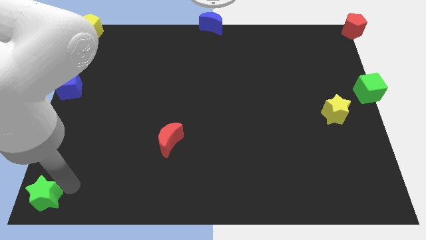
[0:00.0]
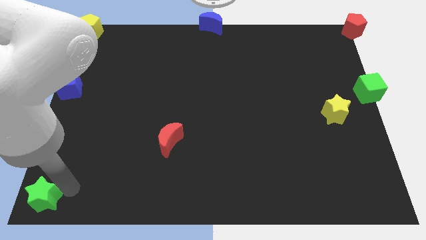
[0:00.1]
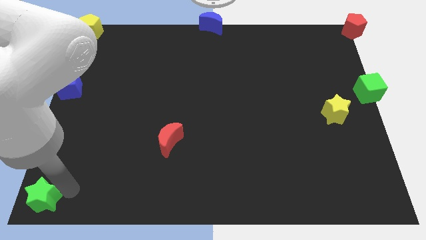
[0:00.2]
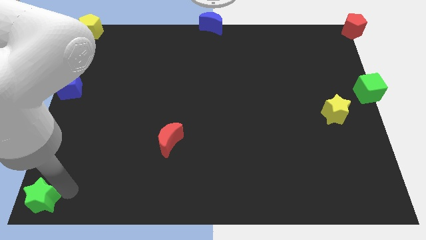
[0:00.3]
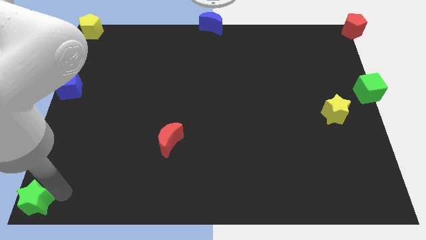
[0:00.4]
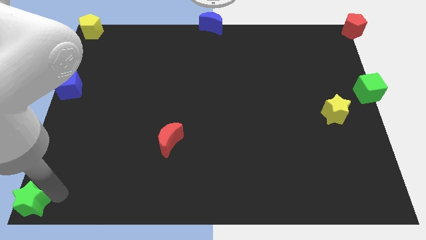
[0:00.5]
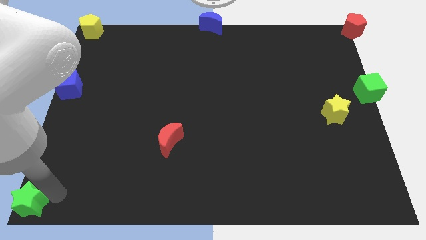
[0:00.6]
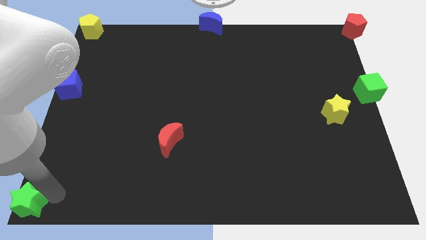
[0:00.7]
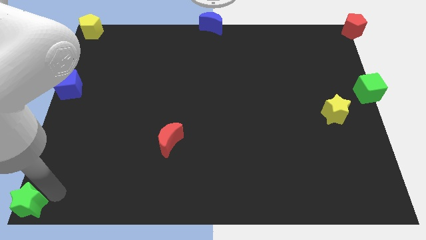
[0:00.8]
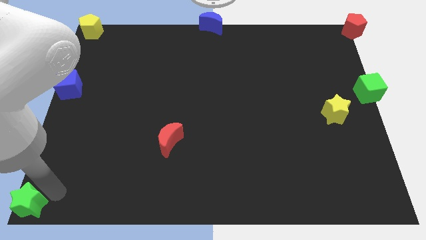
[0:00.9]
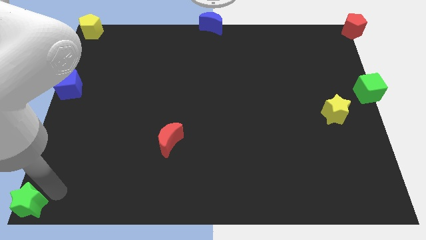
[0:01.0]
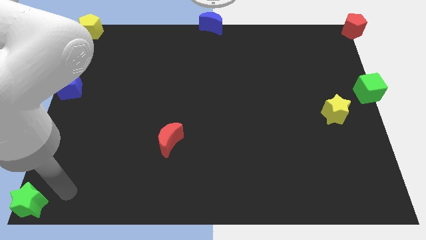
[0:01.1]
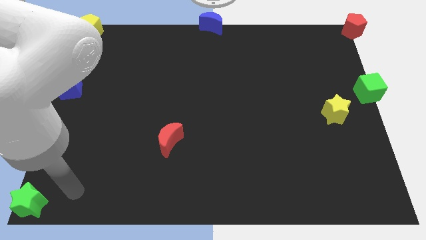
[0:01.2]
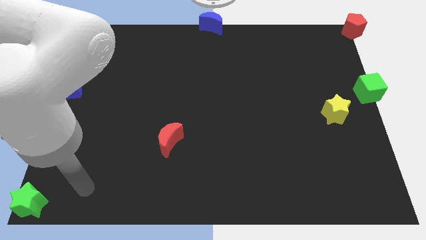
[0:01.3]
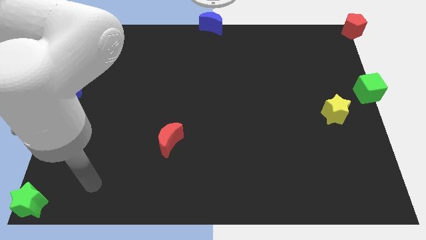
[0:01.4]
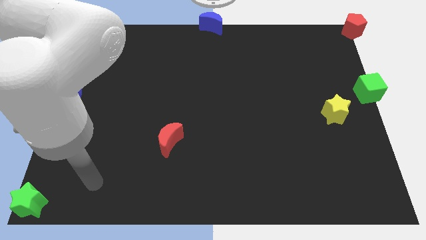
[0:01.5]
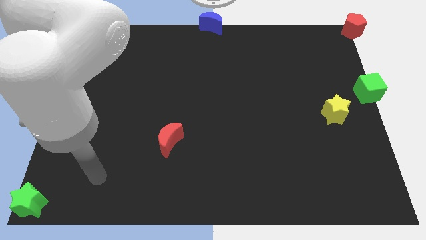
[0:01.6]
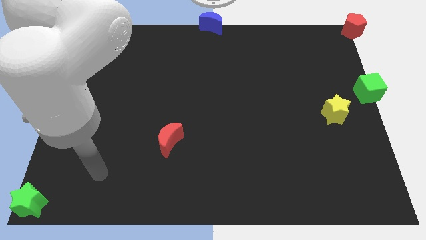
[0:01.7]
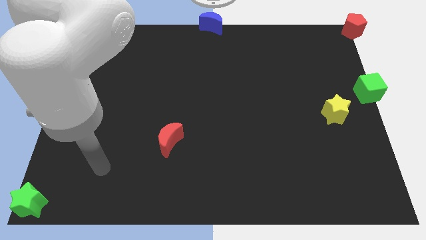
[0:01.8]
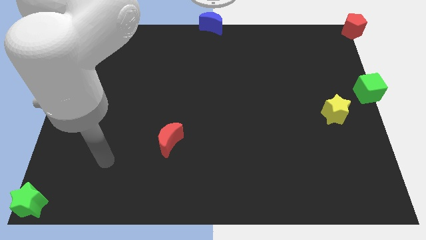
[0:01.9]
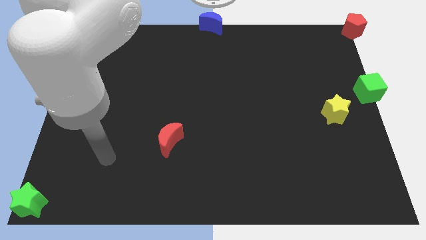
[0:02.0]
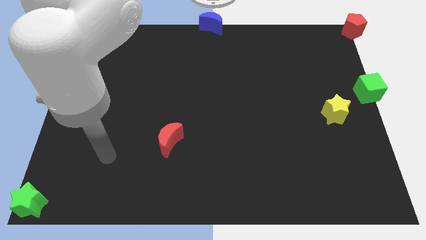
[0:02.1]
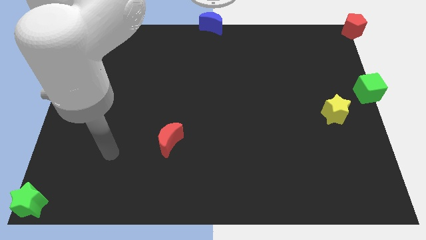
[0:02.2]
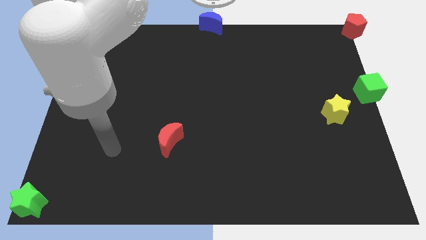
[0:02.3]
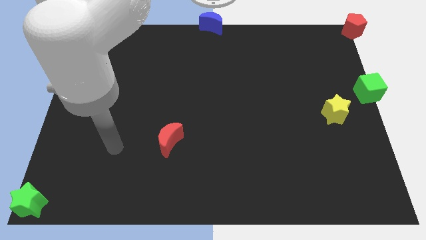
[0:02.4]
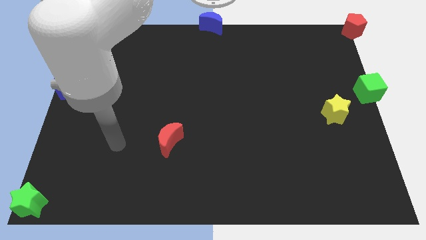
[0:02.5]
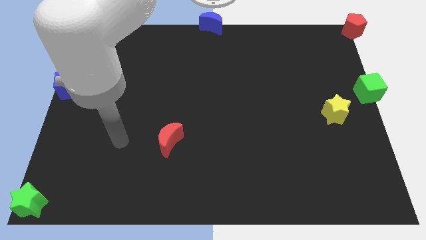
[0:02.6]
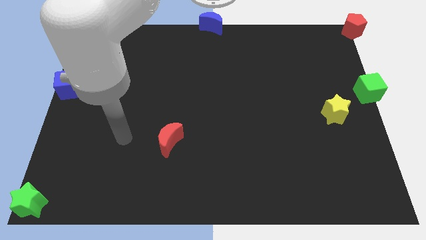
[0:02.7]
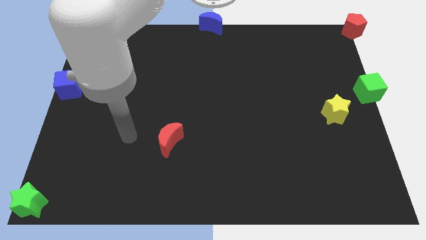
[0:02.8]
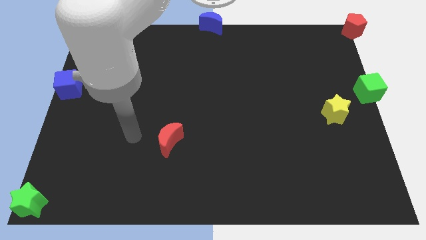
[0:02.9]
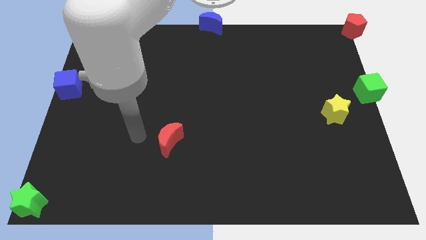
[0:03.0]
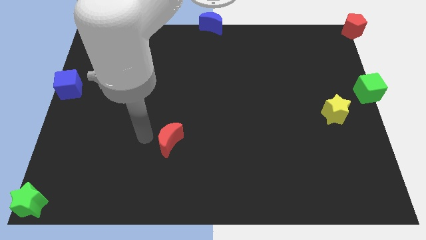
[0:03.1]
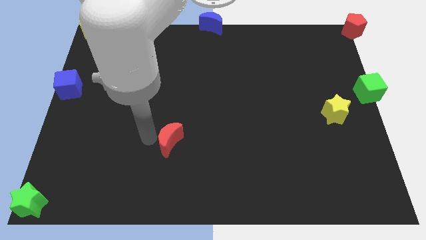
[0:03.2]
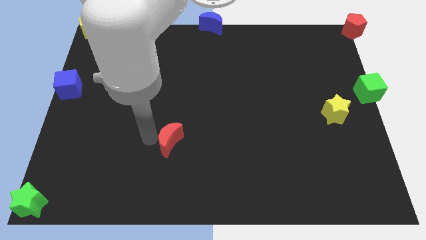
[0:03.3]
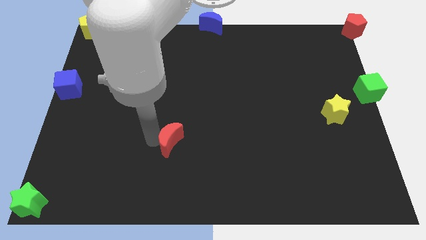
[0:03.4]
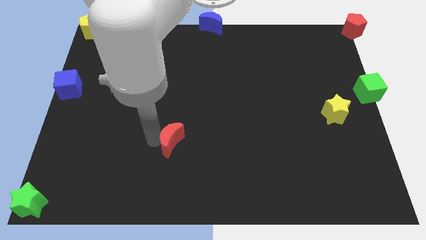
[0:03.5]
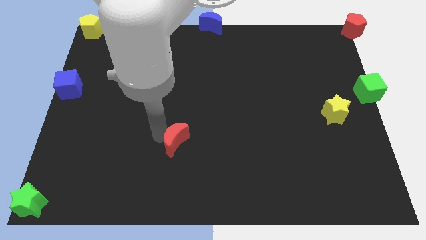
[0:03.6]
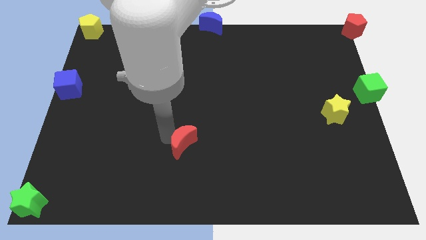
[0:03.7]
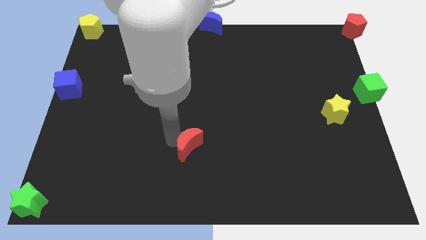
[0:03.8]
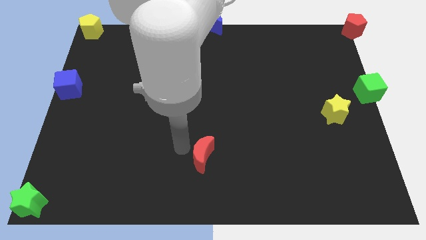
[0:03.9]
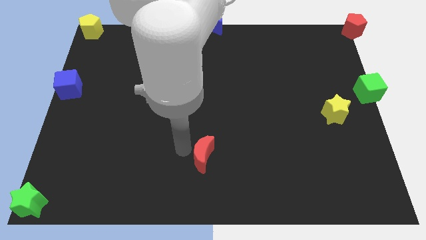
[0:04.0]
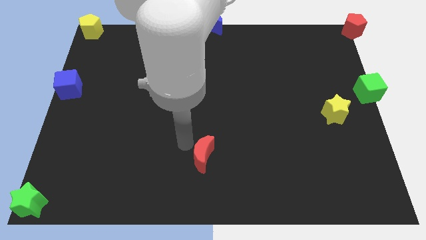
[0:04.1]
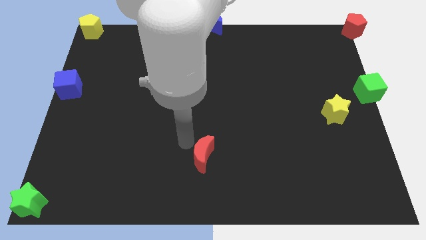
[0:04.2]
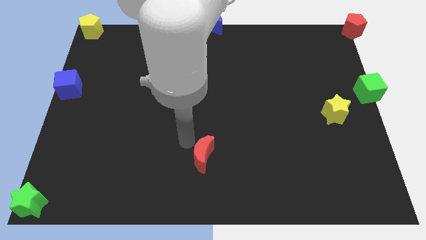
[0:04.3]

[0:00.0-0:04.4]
place the red moon diagonally to the blue moon

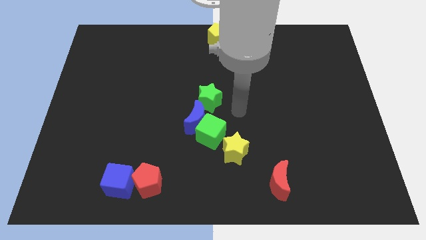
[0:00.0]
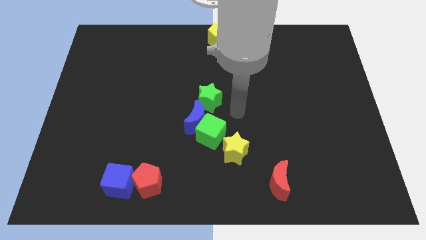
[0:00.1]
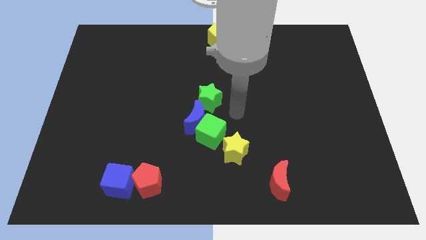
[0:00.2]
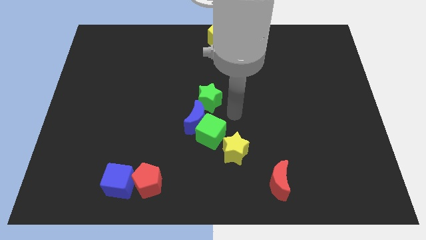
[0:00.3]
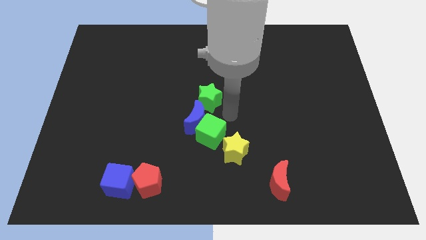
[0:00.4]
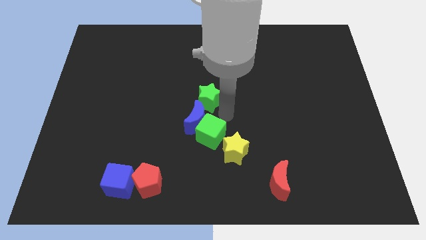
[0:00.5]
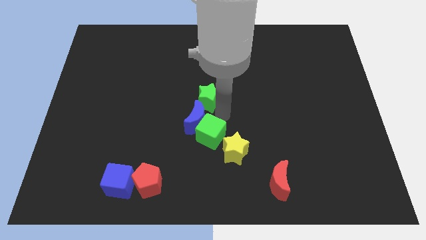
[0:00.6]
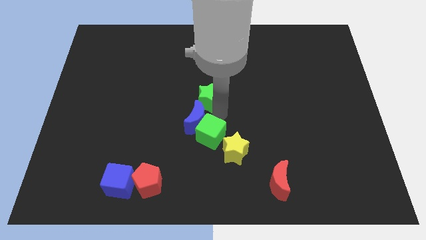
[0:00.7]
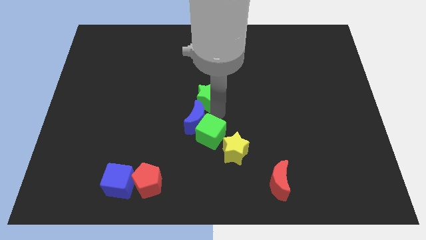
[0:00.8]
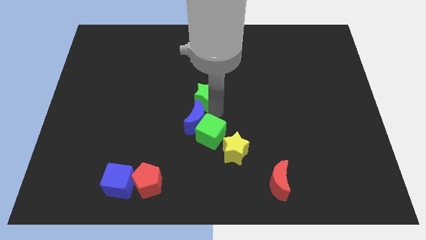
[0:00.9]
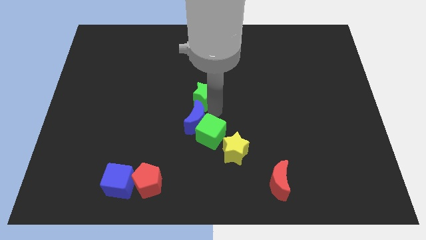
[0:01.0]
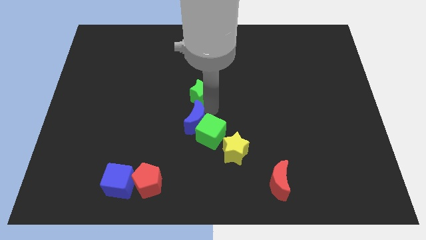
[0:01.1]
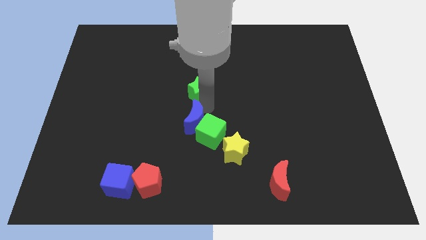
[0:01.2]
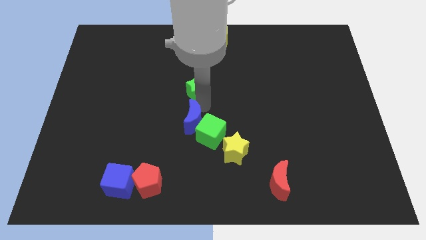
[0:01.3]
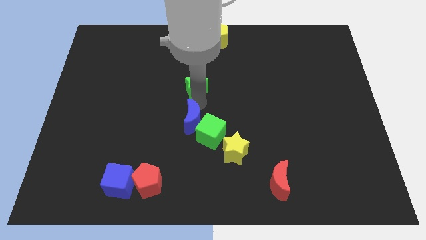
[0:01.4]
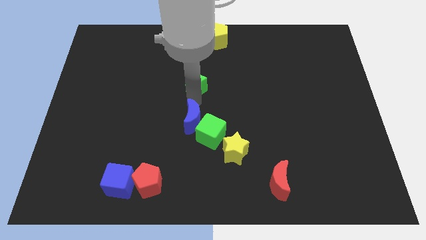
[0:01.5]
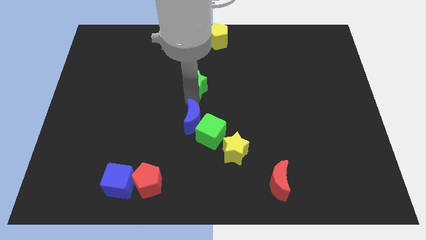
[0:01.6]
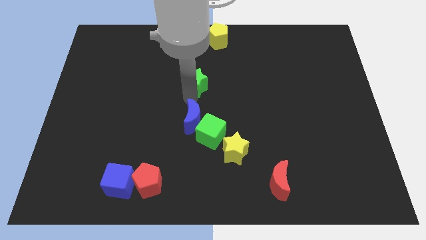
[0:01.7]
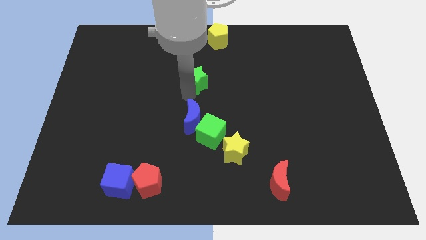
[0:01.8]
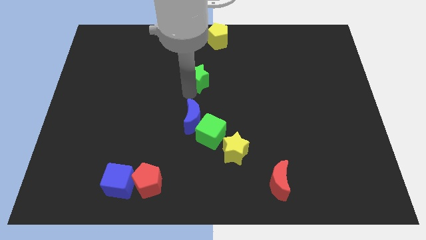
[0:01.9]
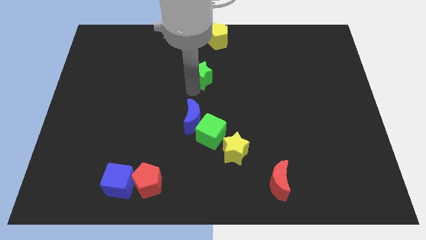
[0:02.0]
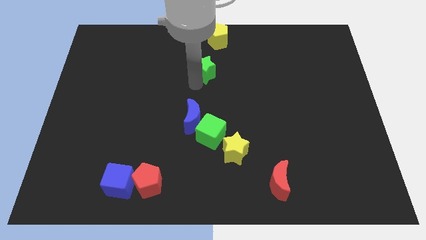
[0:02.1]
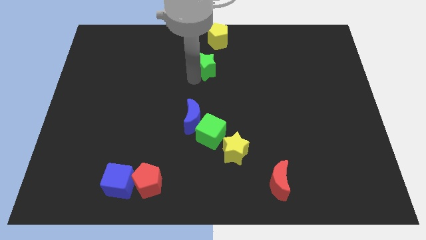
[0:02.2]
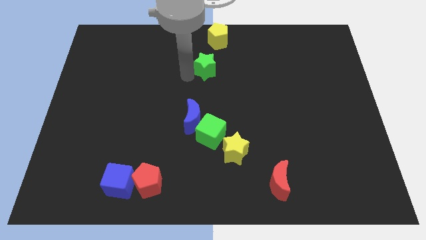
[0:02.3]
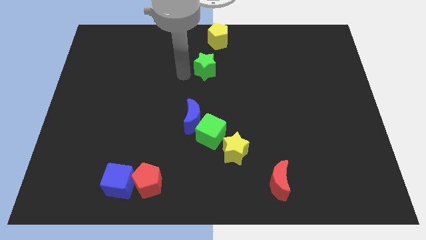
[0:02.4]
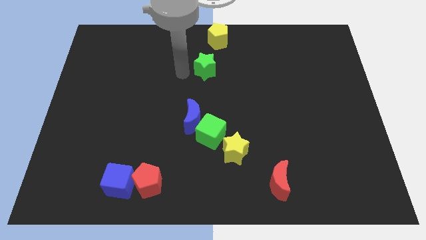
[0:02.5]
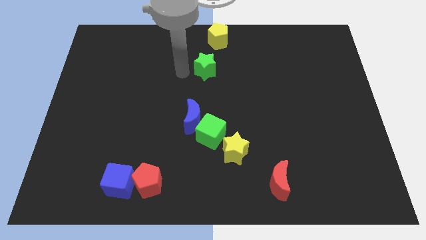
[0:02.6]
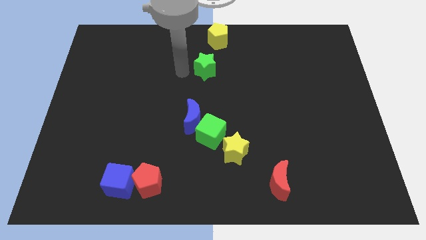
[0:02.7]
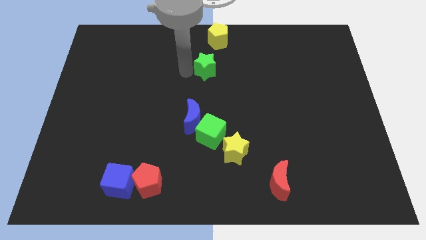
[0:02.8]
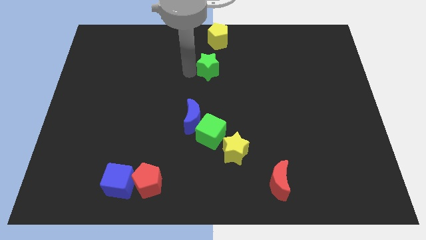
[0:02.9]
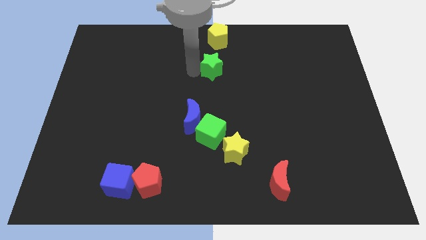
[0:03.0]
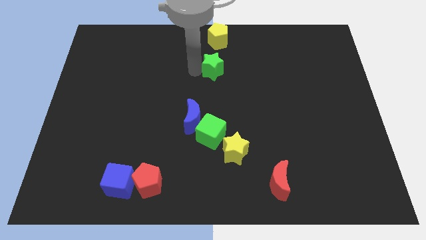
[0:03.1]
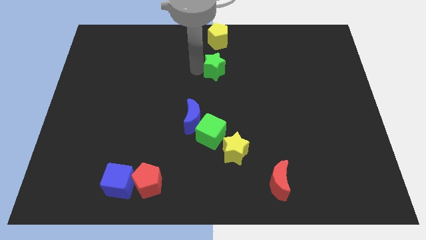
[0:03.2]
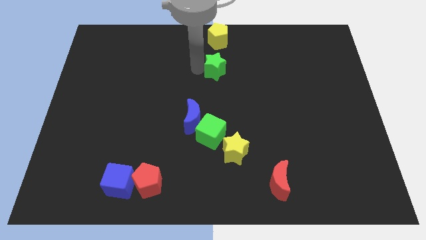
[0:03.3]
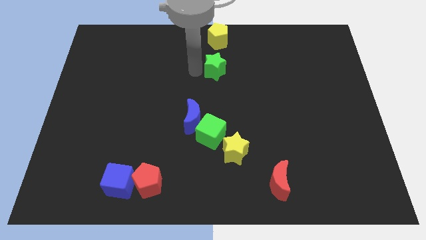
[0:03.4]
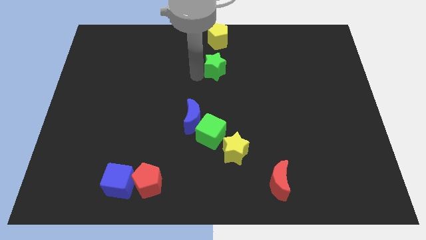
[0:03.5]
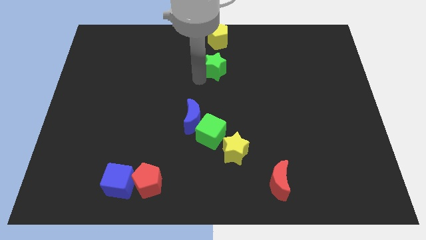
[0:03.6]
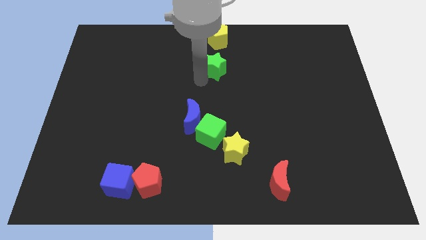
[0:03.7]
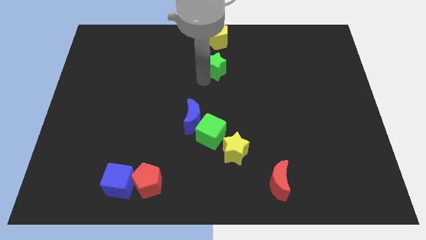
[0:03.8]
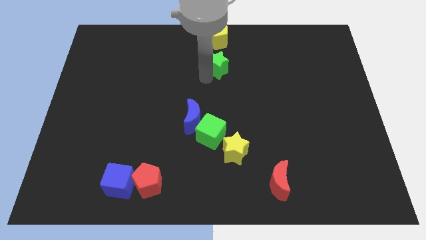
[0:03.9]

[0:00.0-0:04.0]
move the green star below the yellow pentagon

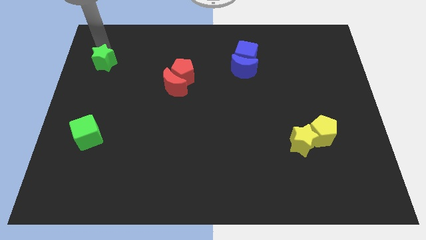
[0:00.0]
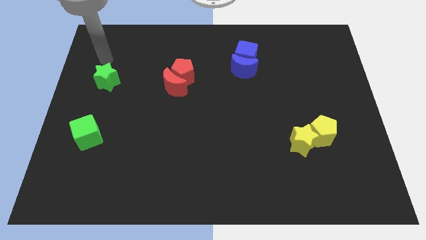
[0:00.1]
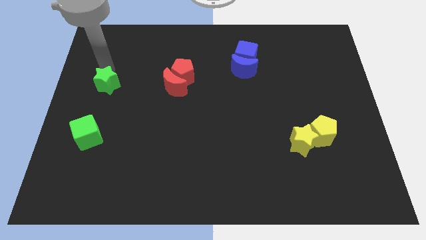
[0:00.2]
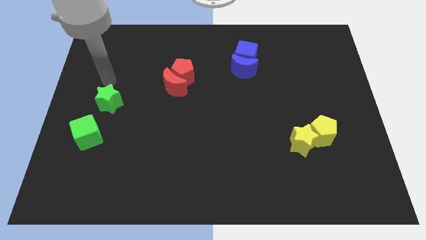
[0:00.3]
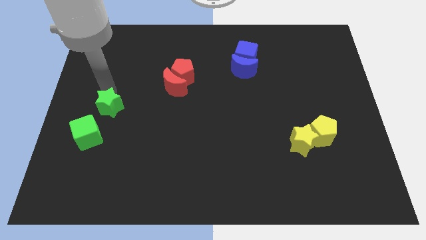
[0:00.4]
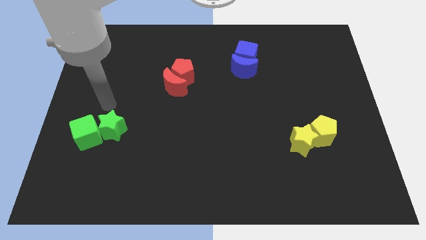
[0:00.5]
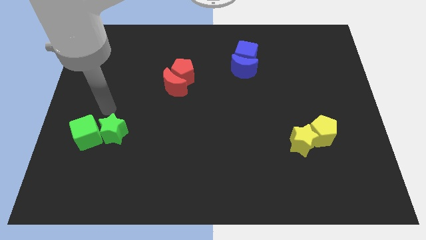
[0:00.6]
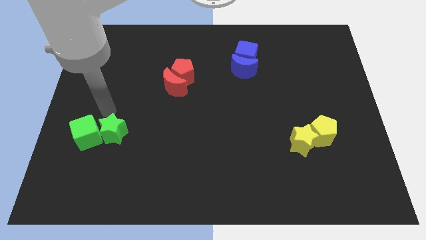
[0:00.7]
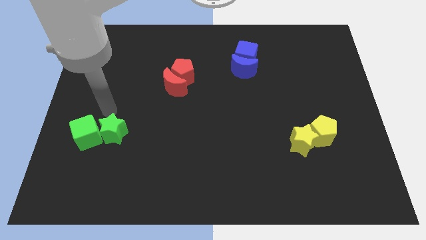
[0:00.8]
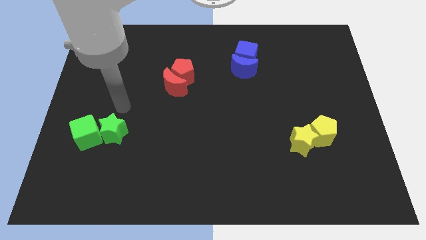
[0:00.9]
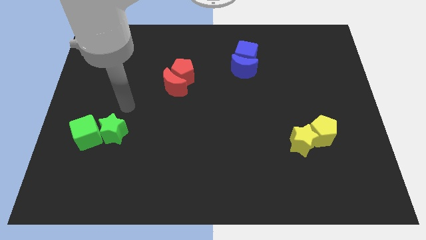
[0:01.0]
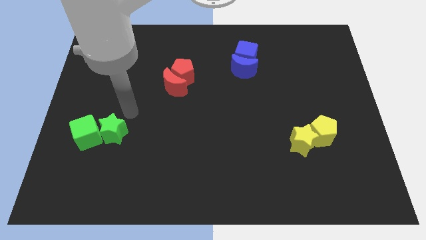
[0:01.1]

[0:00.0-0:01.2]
place the green star to the right of the green cube
